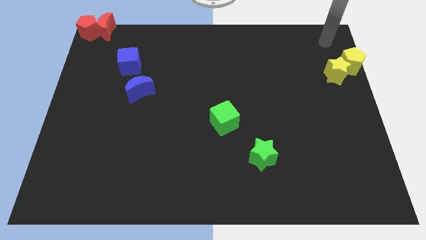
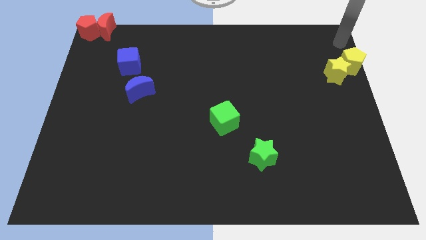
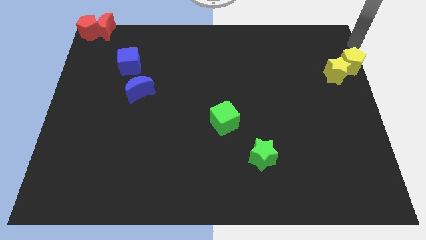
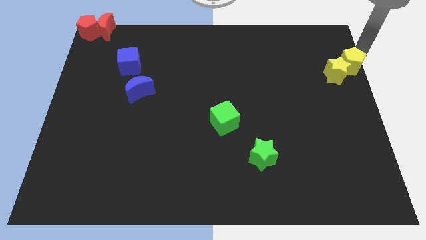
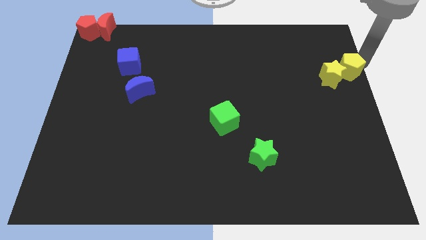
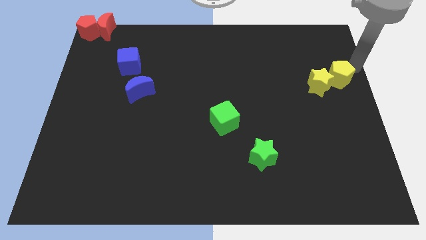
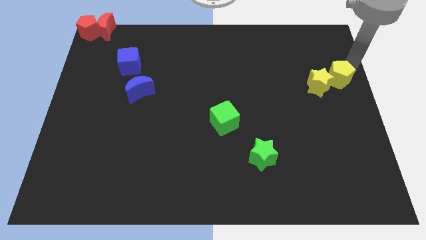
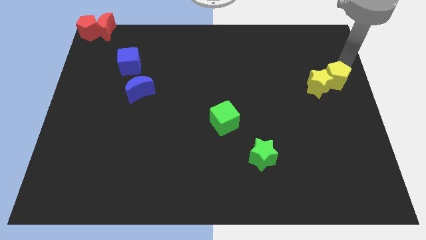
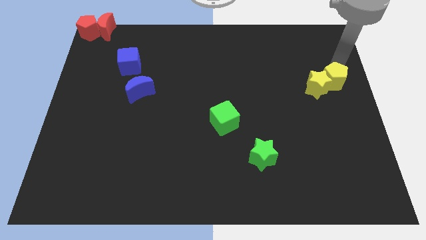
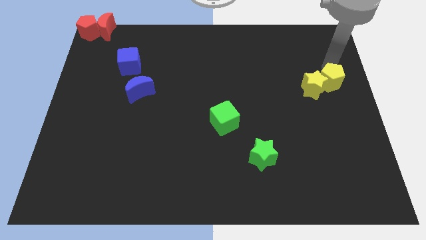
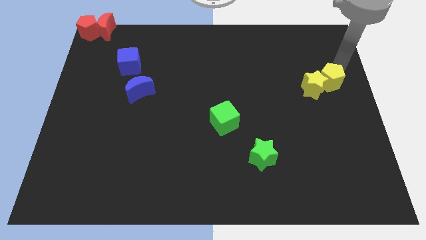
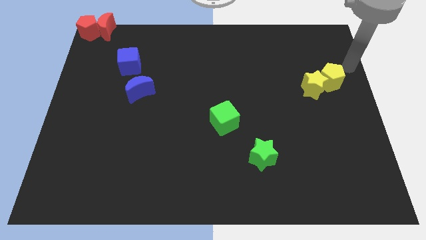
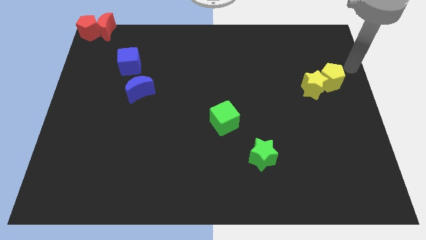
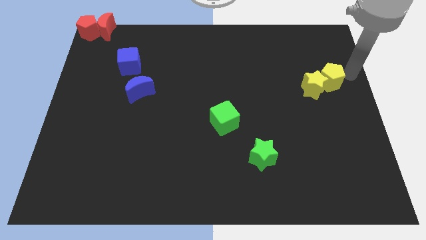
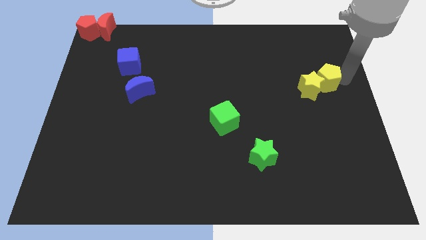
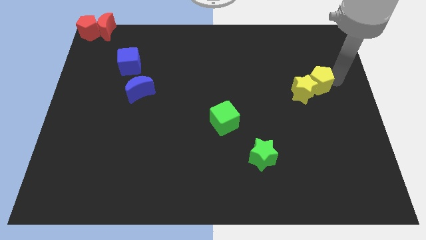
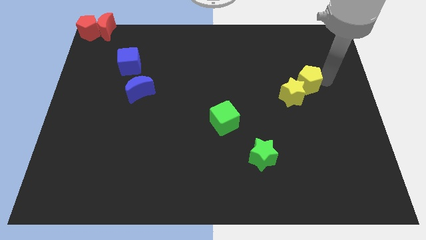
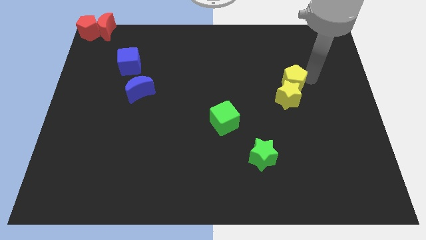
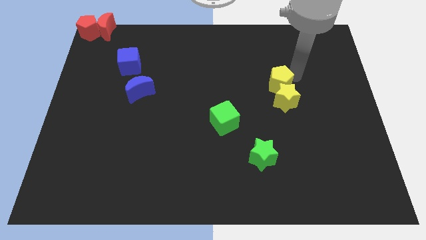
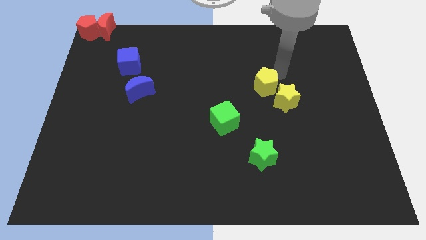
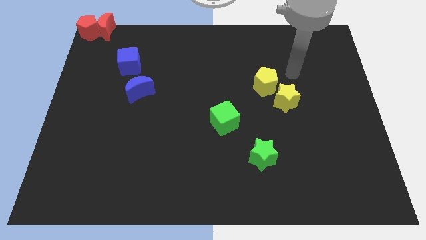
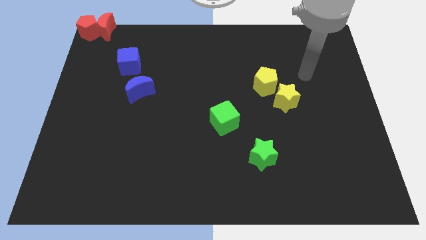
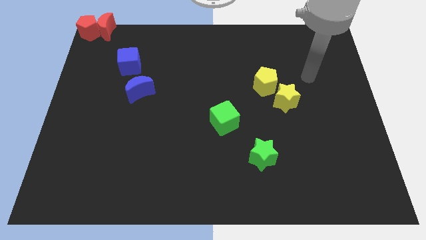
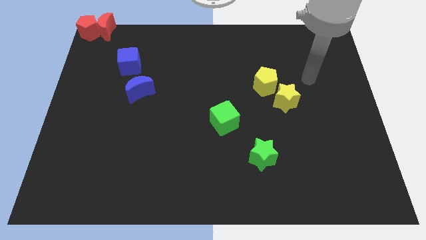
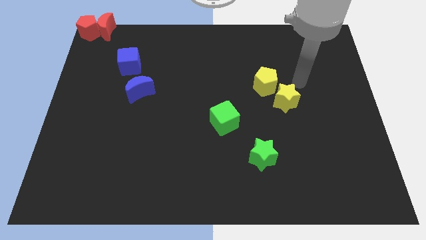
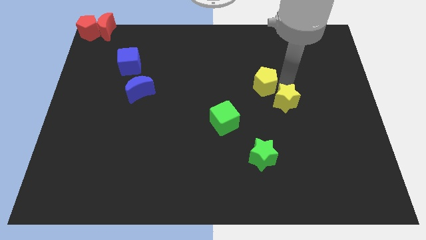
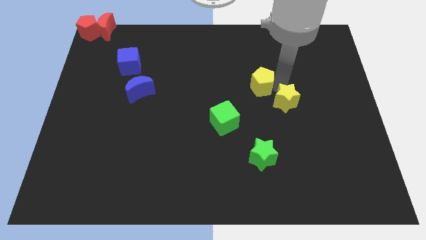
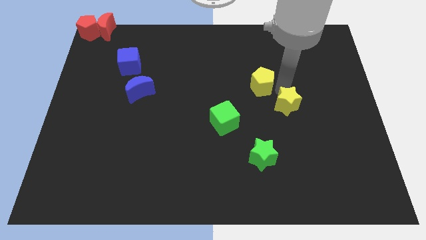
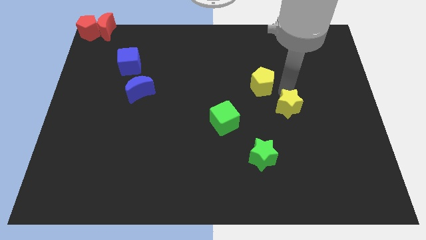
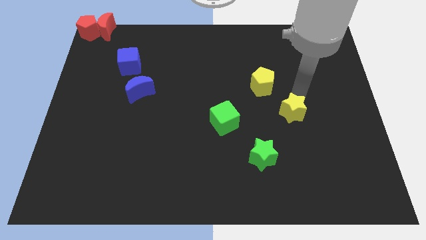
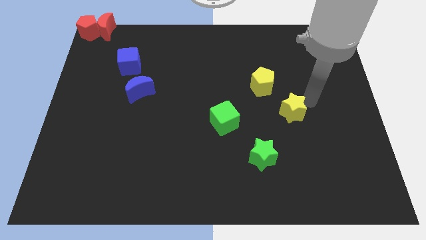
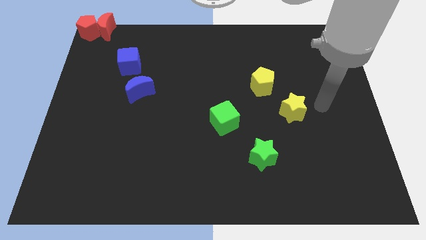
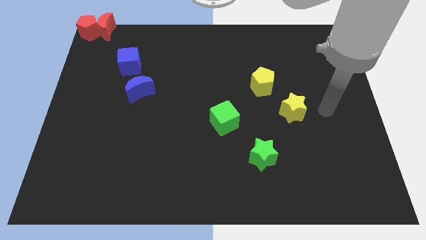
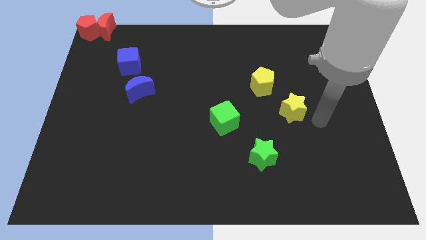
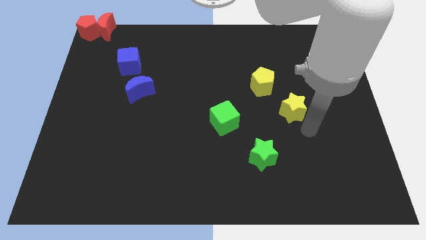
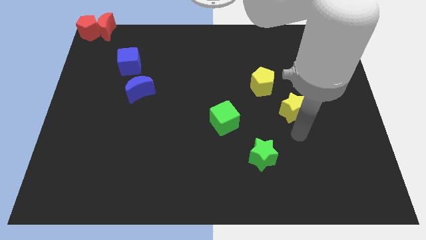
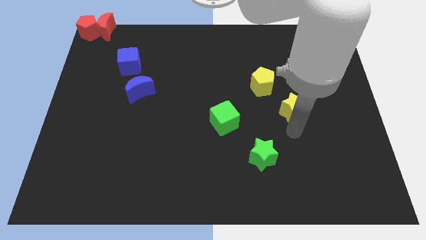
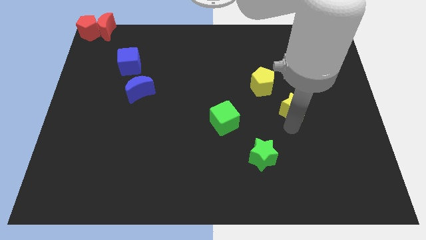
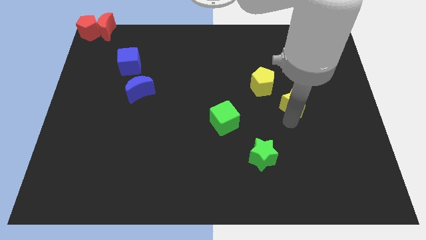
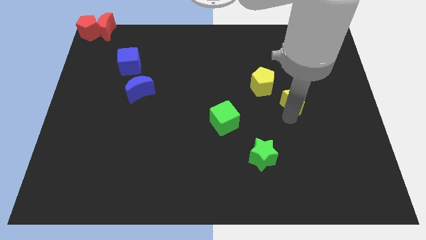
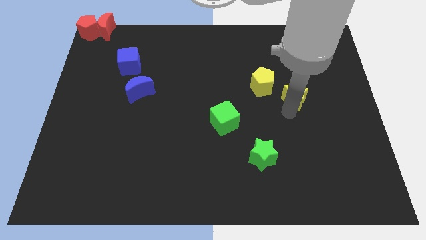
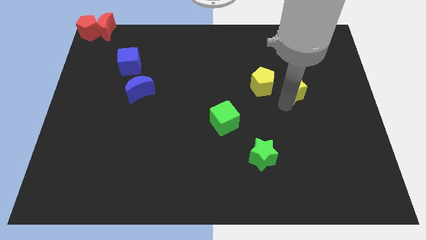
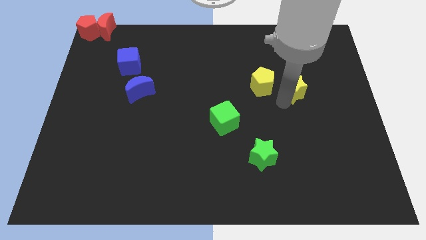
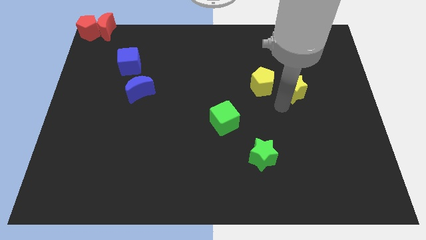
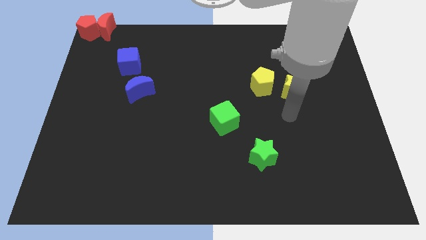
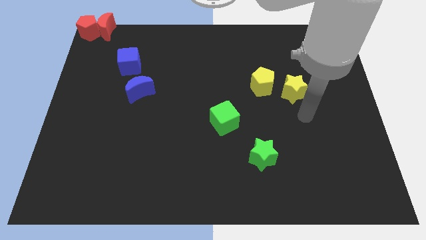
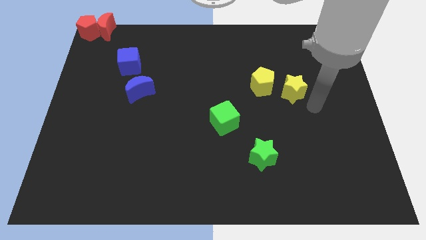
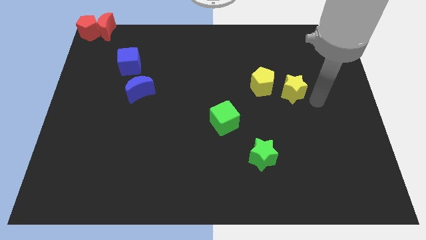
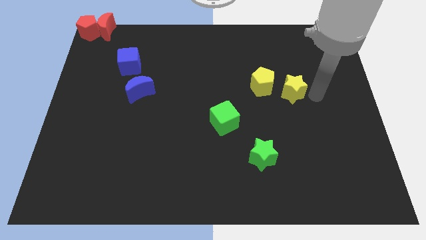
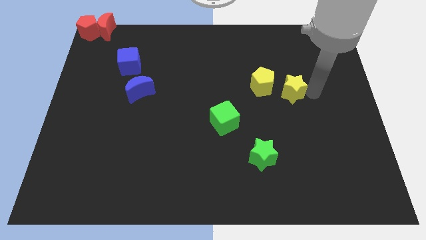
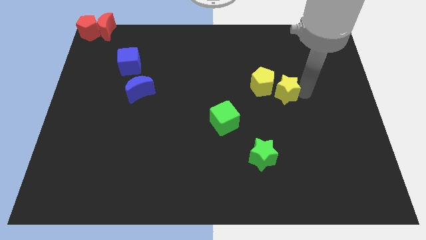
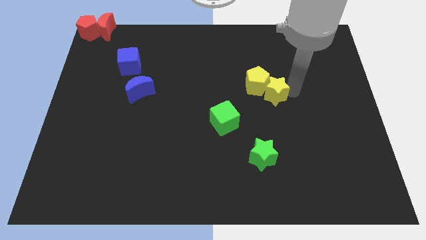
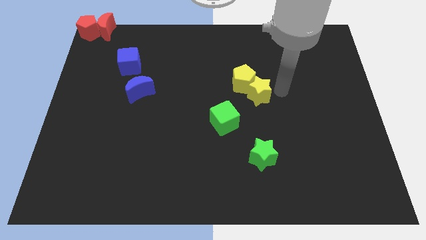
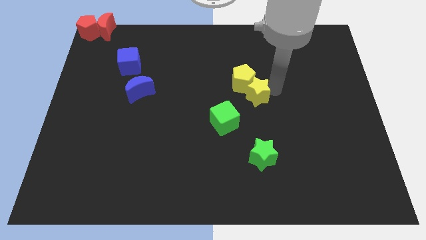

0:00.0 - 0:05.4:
slide the yellow blocks diagonally on the top right side of the green cube

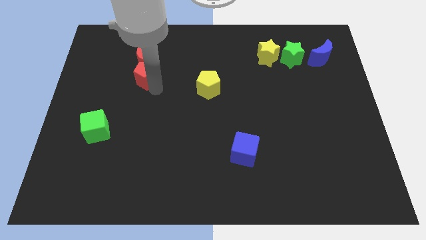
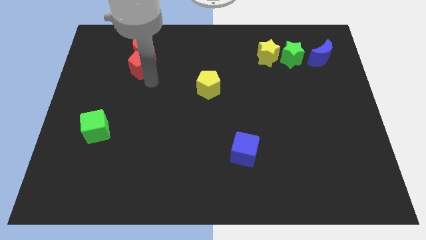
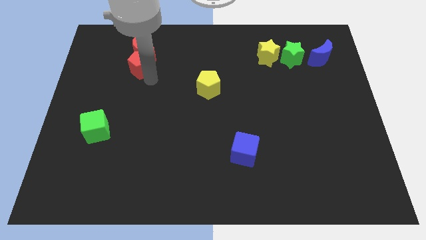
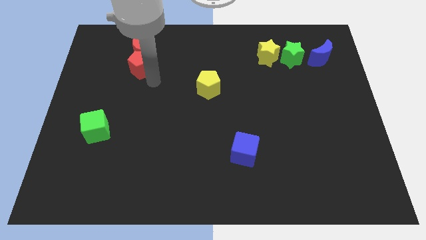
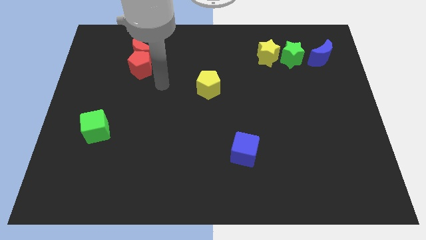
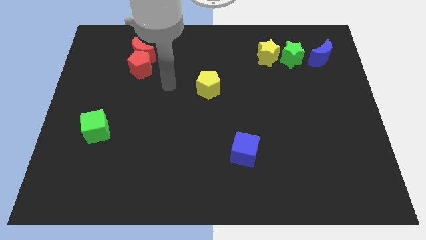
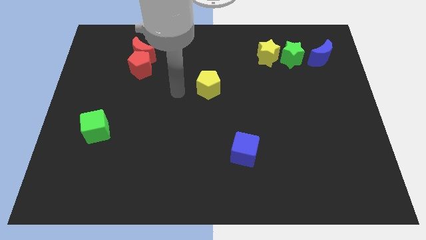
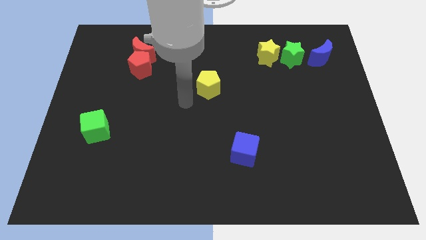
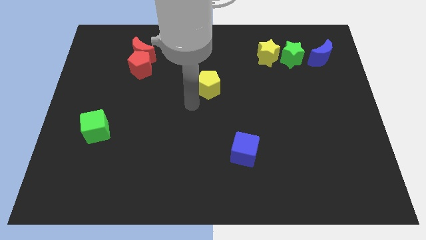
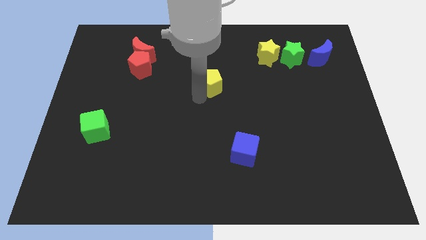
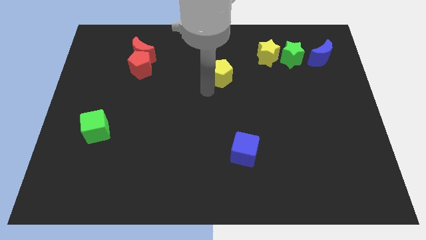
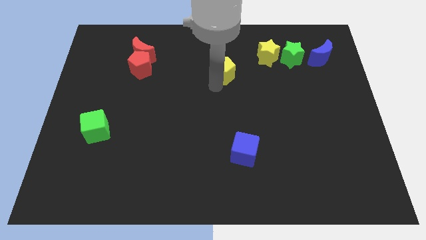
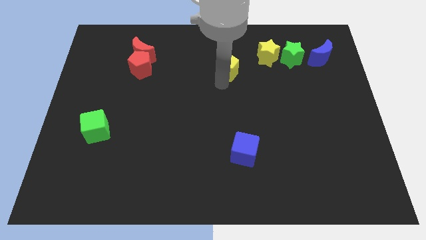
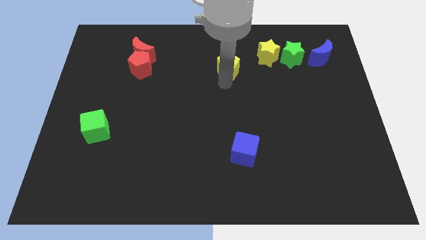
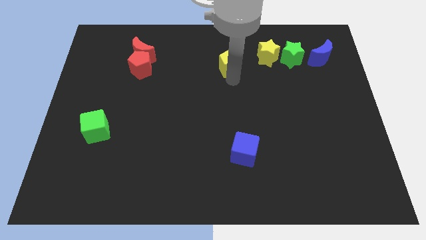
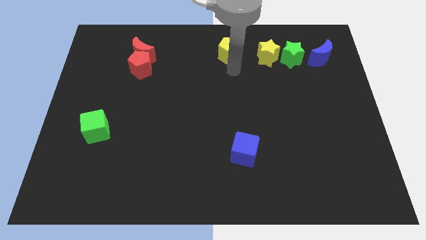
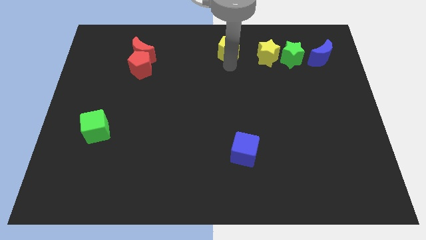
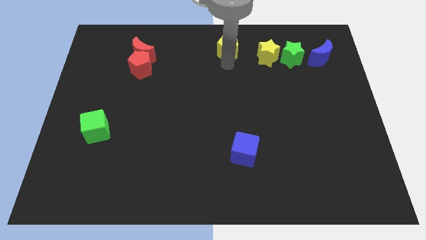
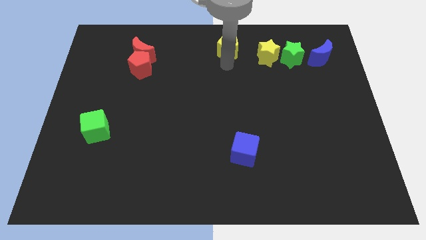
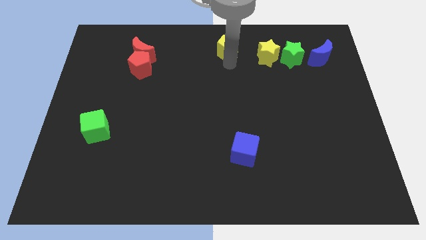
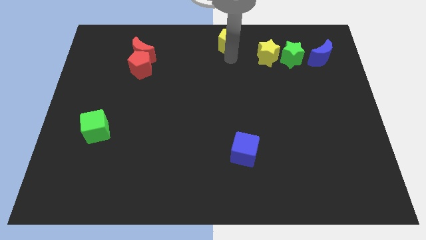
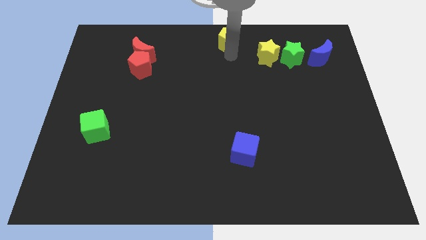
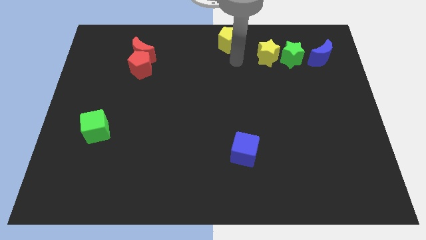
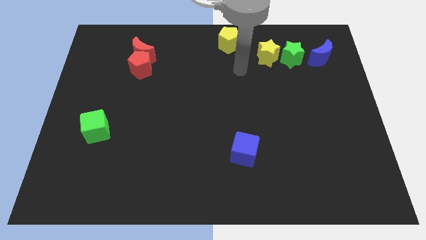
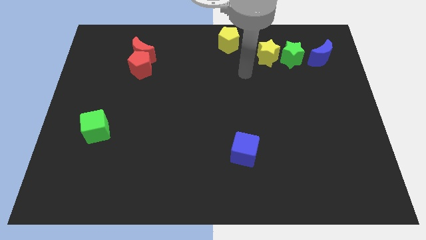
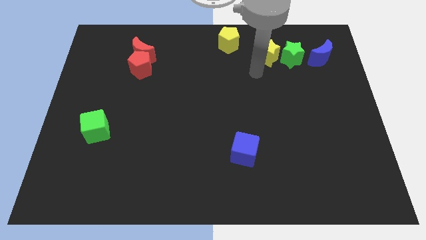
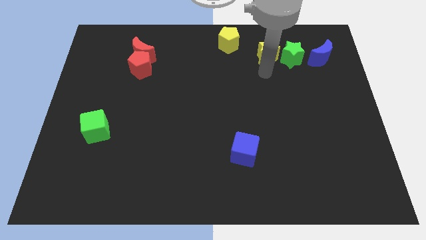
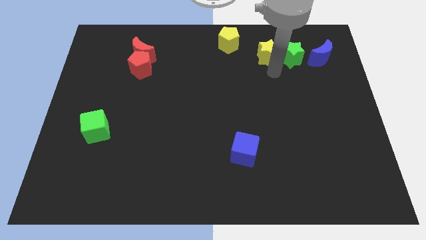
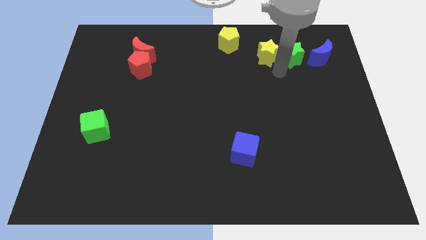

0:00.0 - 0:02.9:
slide the yellow pentagon to the top center of the board

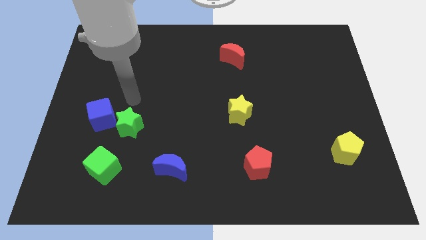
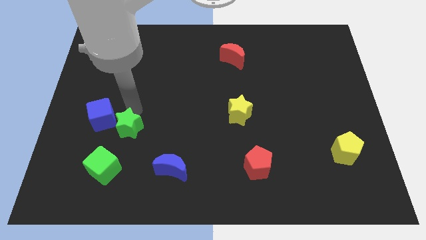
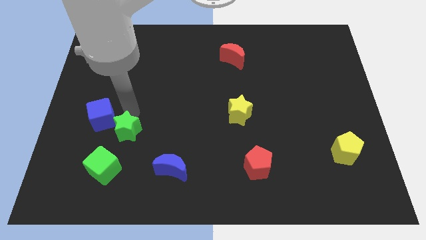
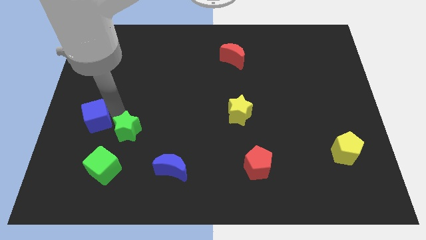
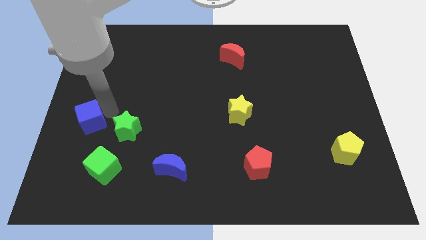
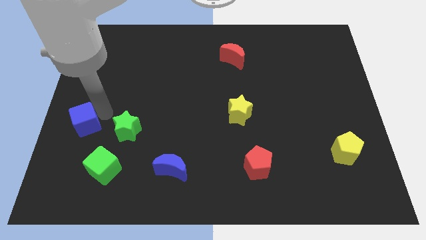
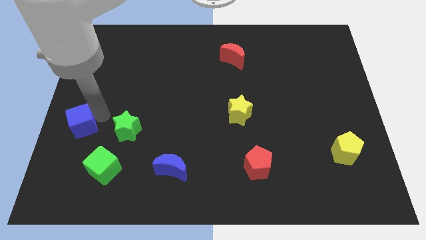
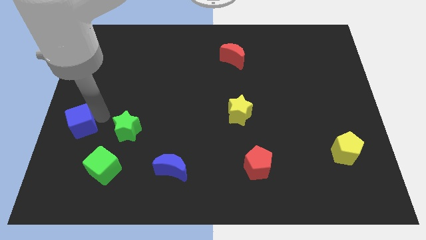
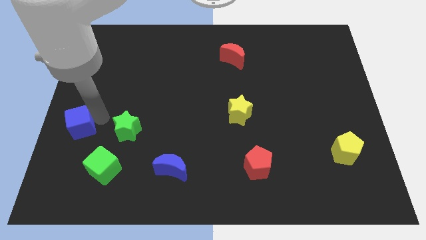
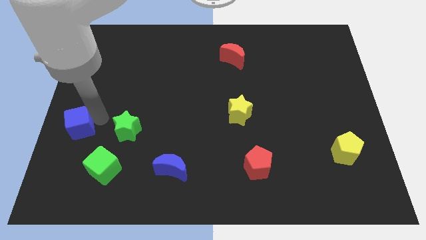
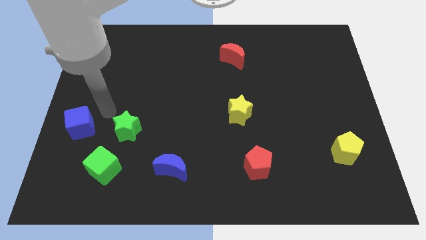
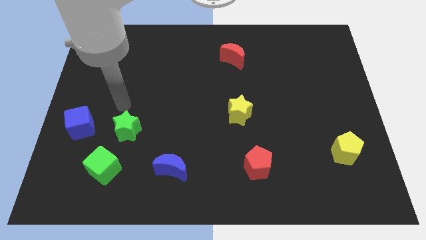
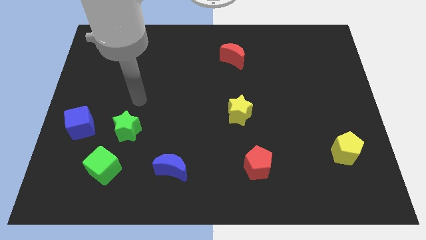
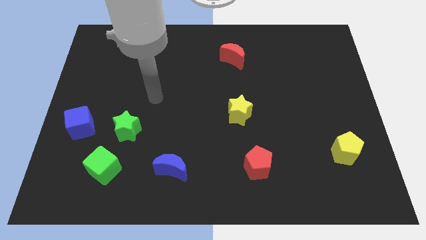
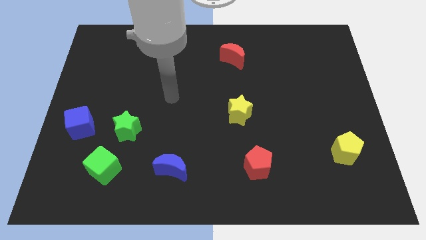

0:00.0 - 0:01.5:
separate the blue cube and green star
